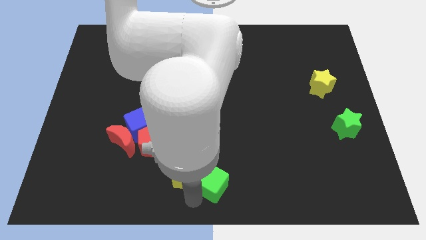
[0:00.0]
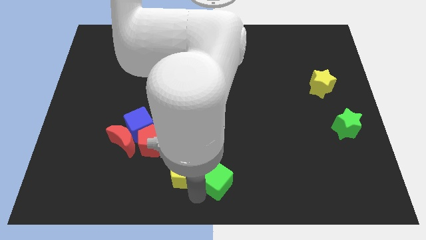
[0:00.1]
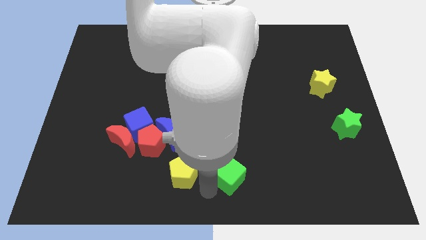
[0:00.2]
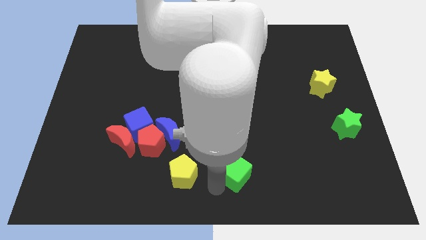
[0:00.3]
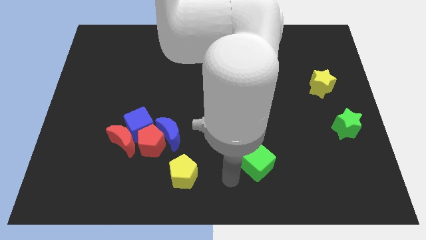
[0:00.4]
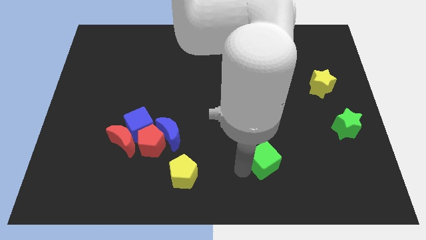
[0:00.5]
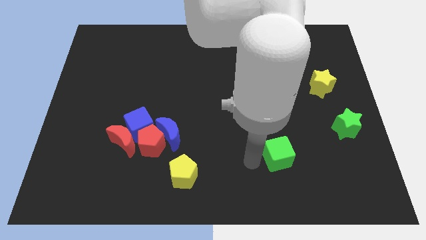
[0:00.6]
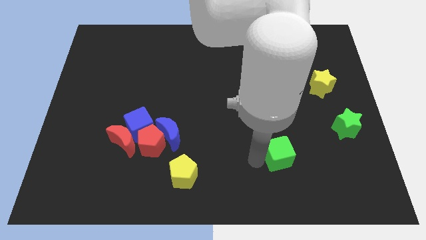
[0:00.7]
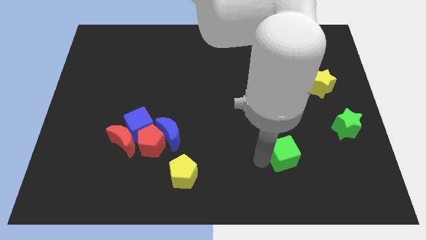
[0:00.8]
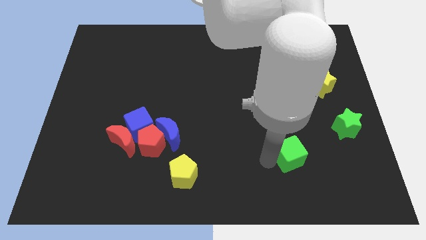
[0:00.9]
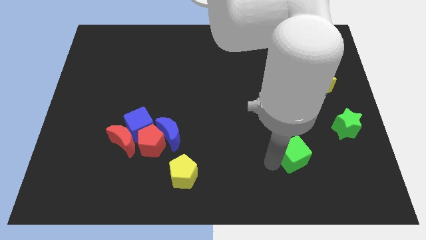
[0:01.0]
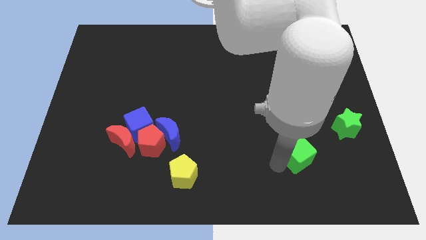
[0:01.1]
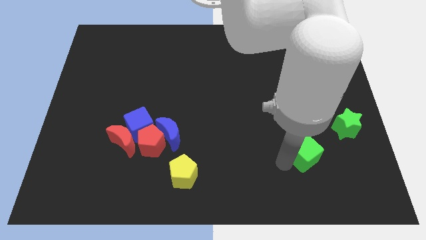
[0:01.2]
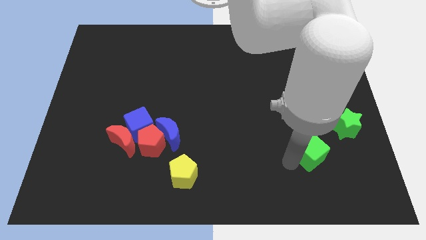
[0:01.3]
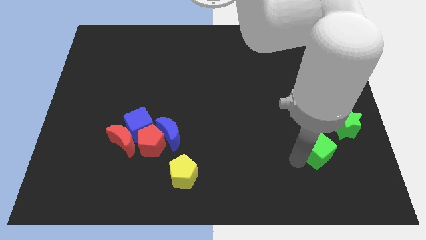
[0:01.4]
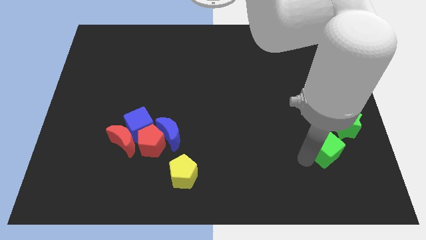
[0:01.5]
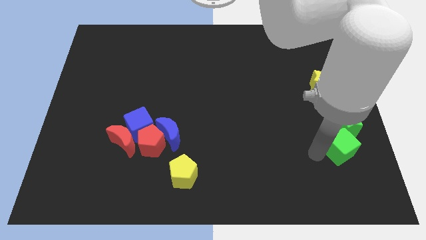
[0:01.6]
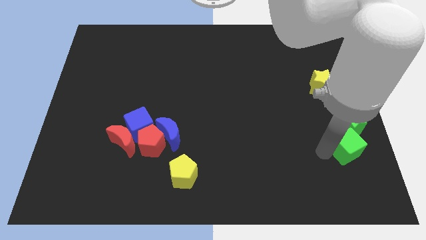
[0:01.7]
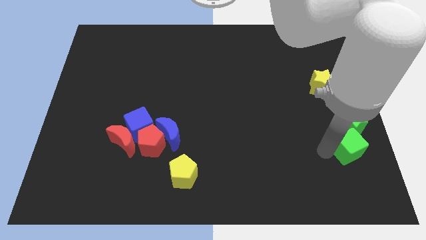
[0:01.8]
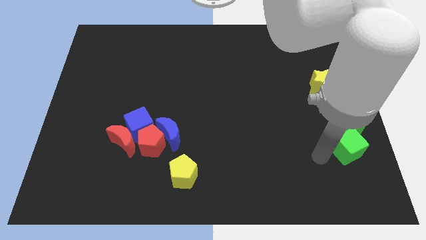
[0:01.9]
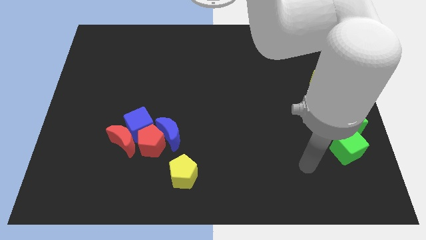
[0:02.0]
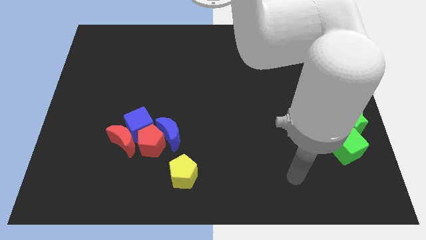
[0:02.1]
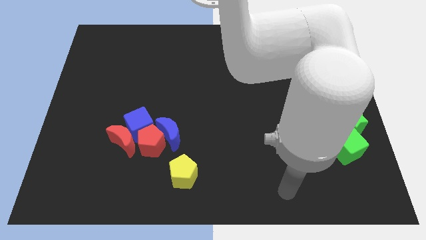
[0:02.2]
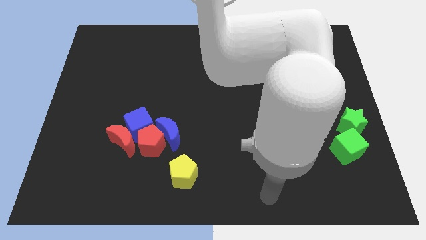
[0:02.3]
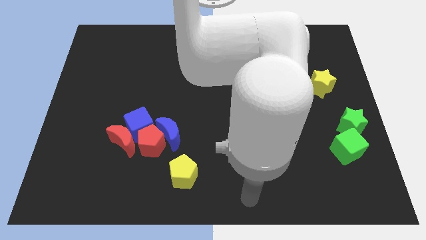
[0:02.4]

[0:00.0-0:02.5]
move the green cube to the bottom of the green star

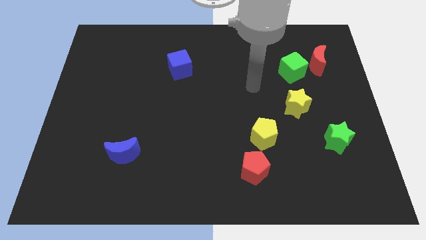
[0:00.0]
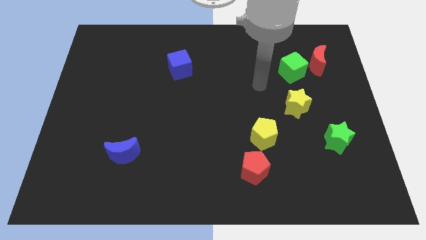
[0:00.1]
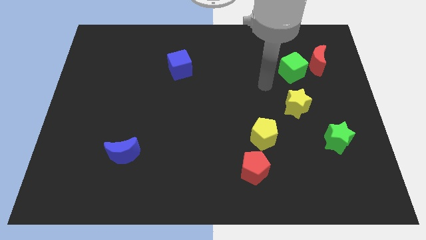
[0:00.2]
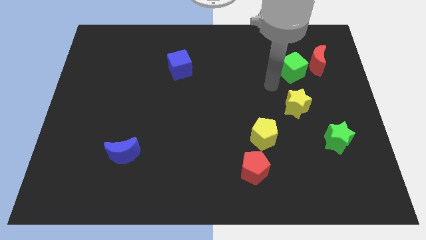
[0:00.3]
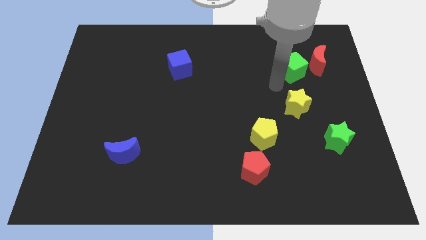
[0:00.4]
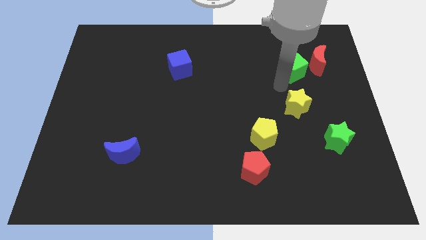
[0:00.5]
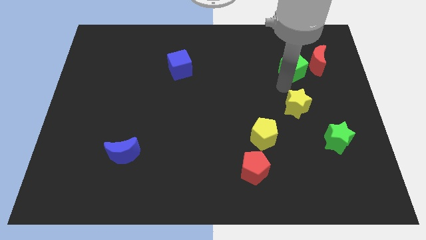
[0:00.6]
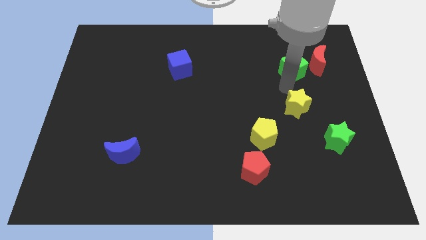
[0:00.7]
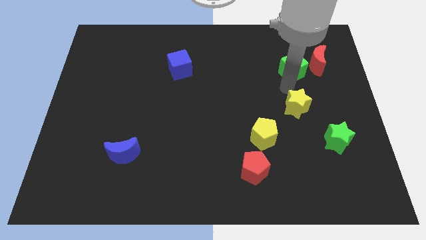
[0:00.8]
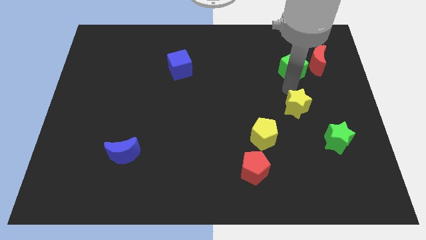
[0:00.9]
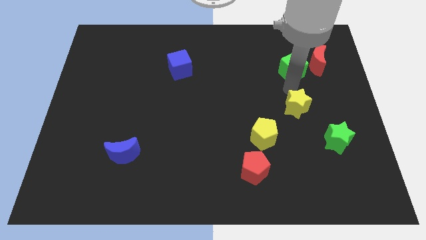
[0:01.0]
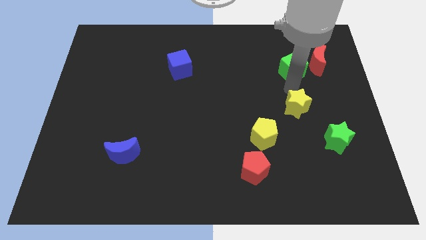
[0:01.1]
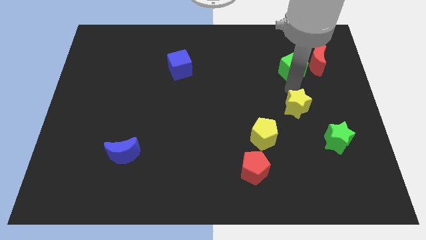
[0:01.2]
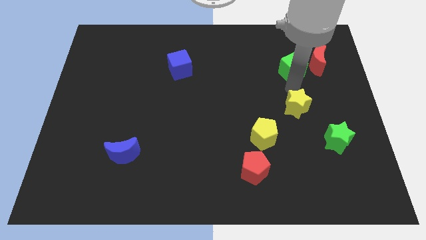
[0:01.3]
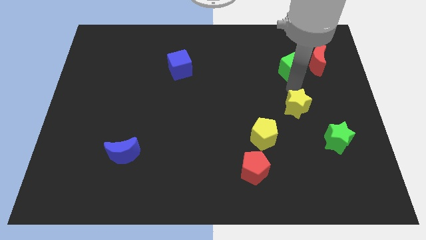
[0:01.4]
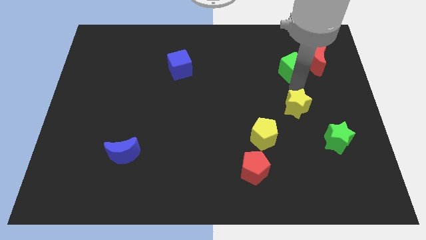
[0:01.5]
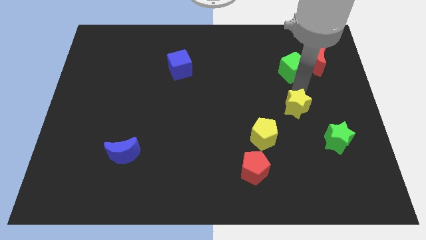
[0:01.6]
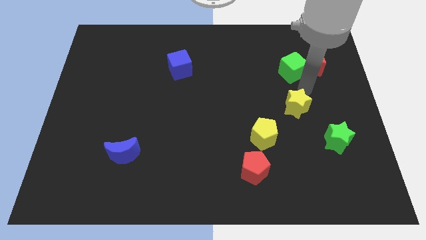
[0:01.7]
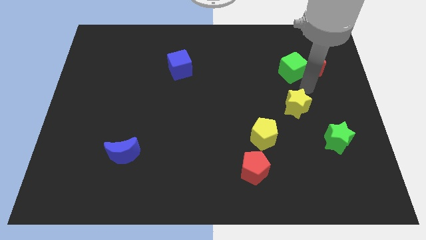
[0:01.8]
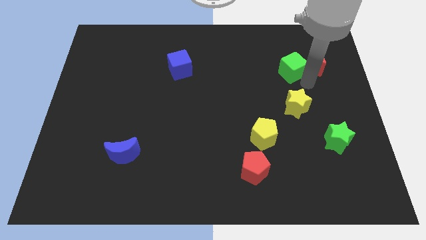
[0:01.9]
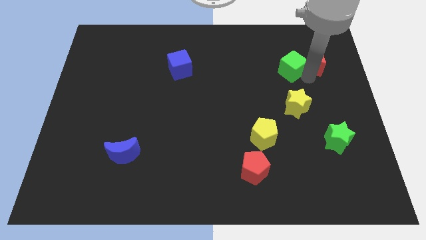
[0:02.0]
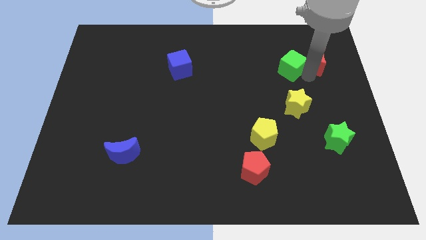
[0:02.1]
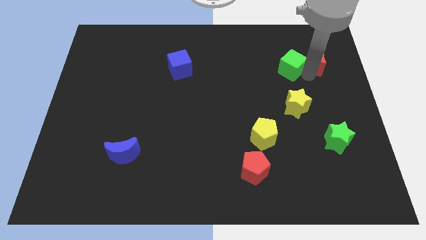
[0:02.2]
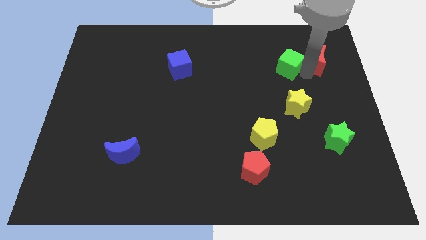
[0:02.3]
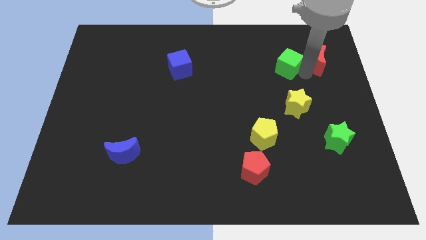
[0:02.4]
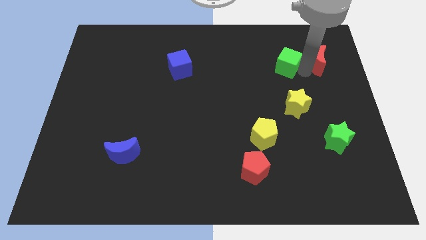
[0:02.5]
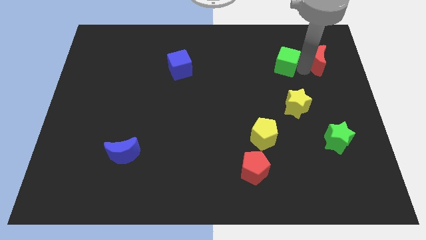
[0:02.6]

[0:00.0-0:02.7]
place your arm in between the green cube and red moon

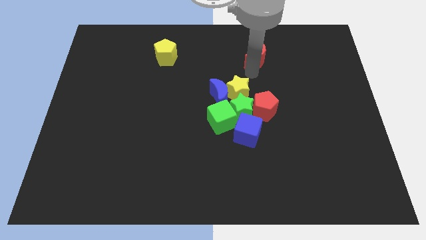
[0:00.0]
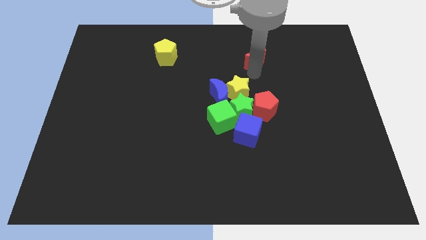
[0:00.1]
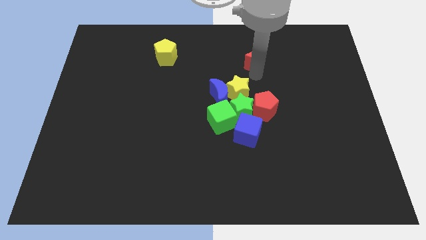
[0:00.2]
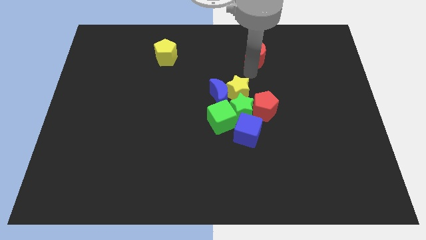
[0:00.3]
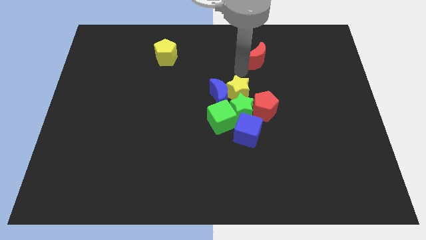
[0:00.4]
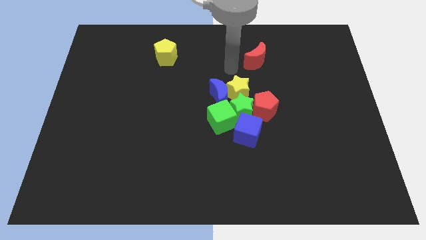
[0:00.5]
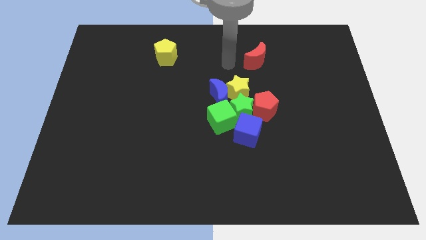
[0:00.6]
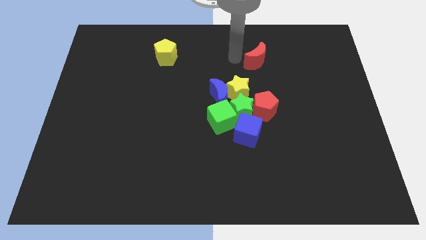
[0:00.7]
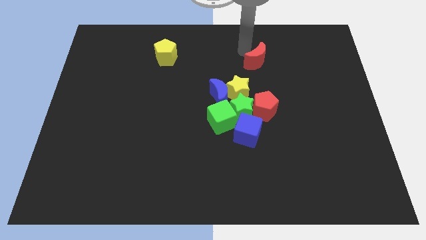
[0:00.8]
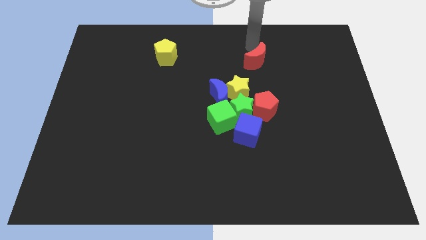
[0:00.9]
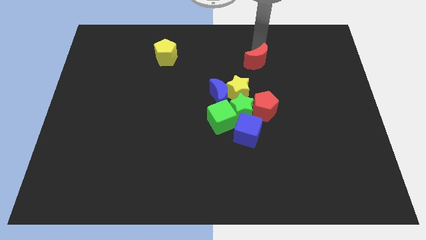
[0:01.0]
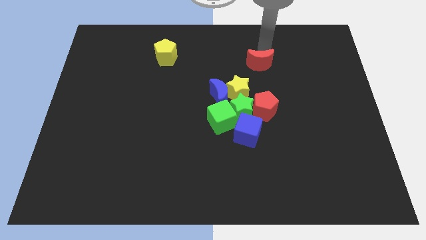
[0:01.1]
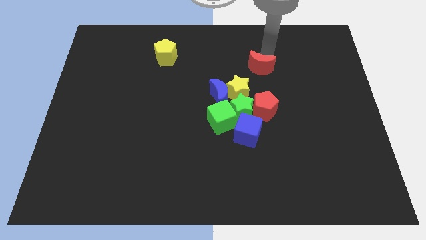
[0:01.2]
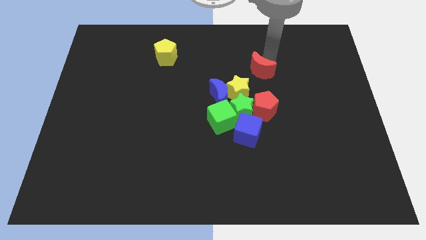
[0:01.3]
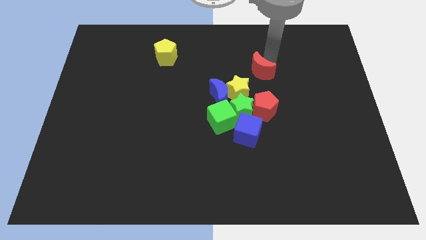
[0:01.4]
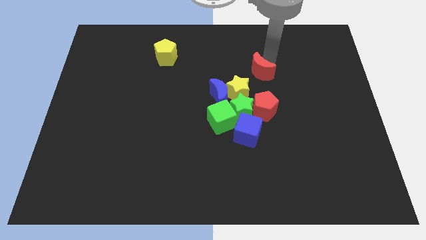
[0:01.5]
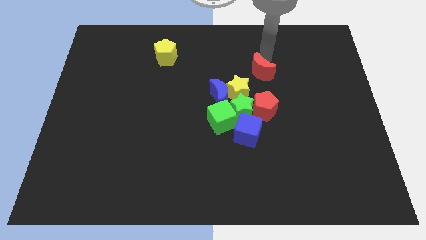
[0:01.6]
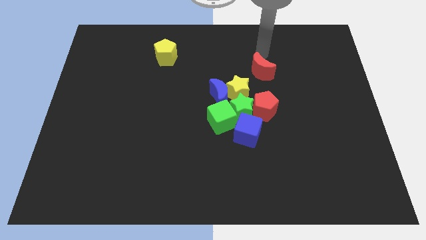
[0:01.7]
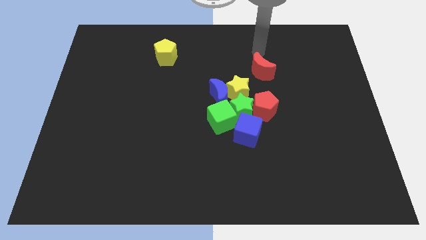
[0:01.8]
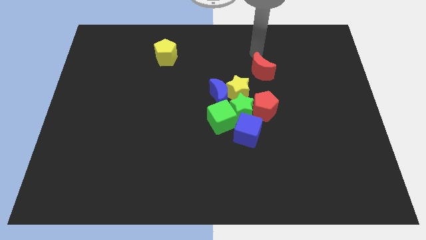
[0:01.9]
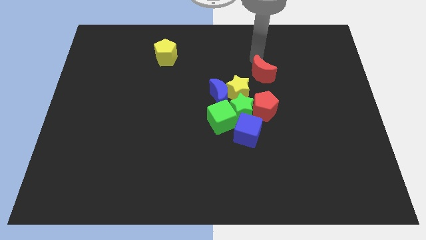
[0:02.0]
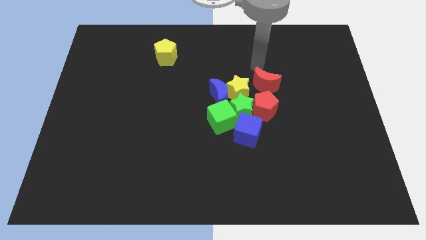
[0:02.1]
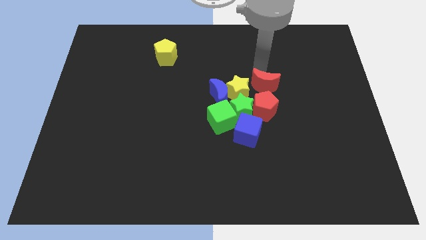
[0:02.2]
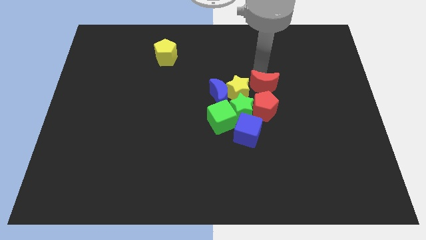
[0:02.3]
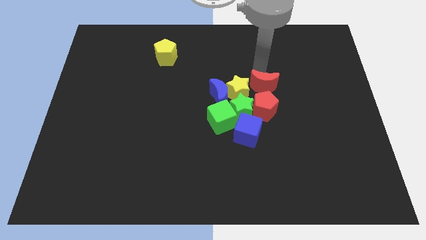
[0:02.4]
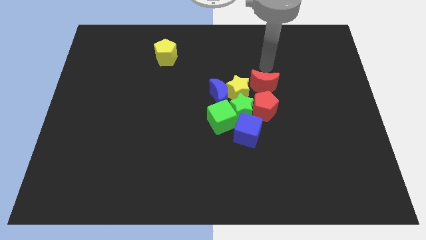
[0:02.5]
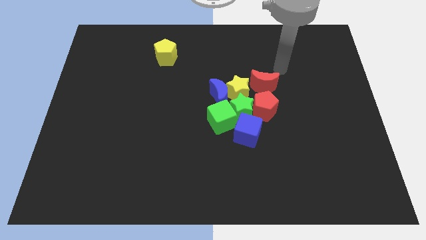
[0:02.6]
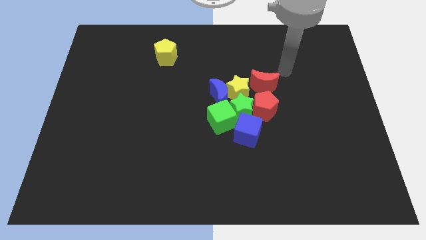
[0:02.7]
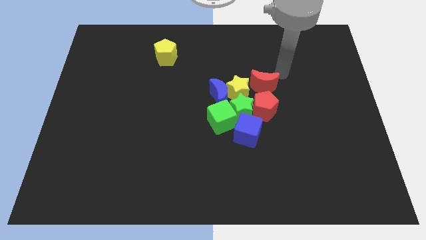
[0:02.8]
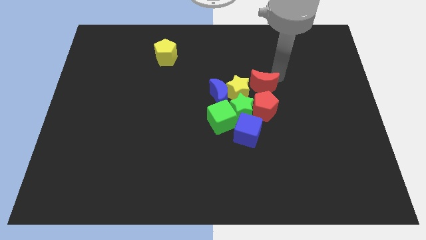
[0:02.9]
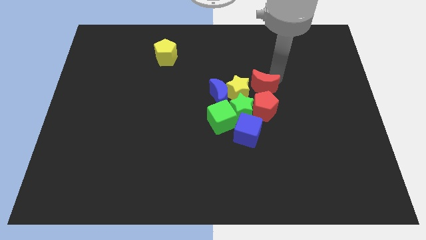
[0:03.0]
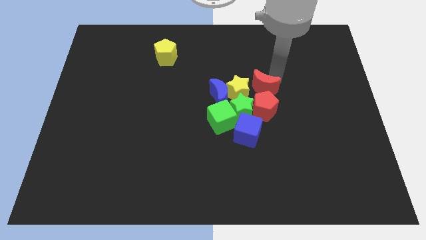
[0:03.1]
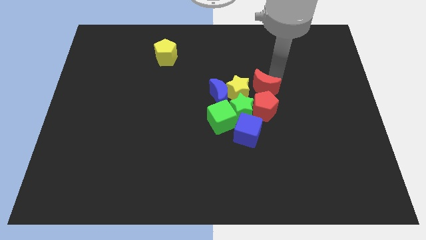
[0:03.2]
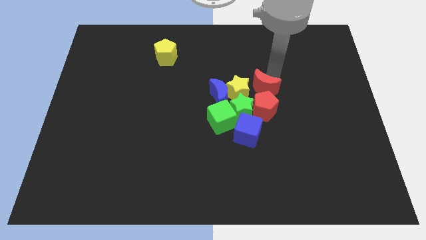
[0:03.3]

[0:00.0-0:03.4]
place the red moon at the top of red pentagon

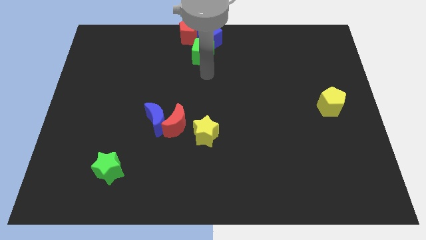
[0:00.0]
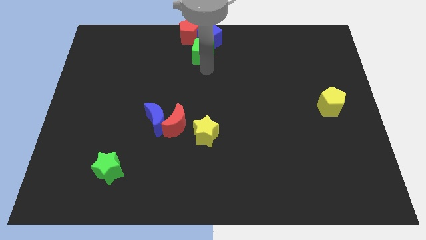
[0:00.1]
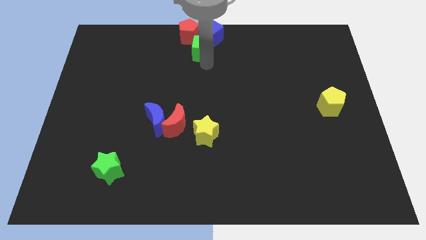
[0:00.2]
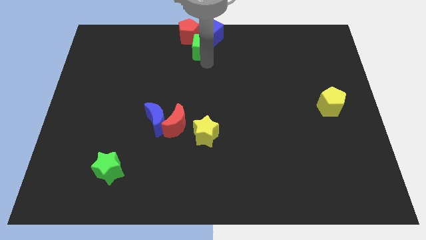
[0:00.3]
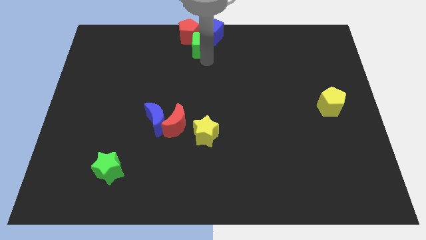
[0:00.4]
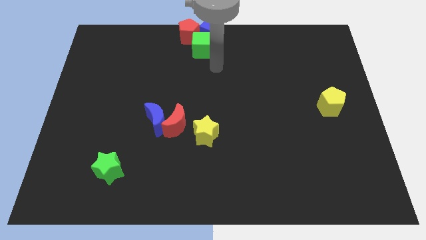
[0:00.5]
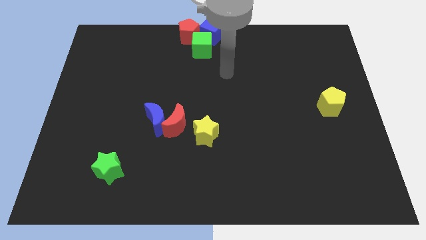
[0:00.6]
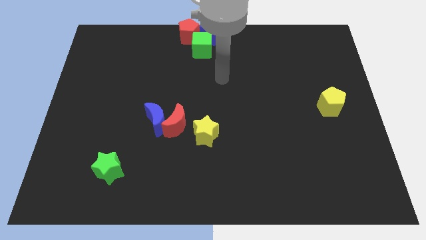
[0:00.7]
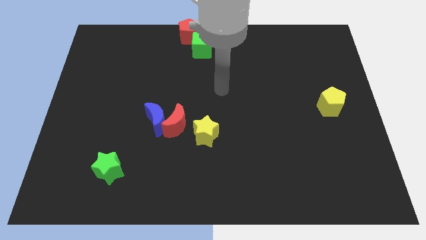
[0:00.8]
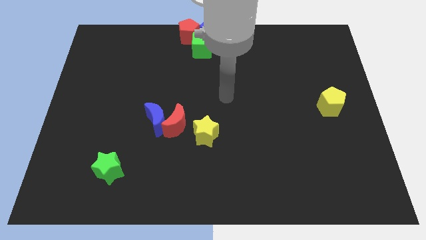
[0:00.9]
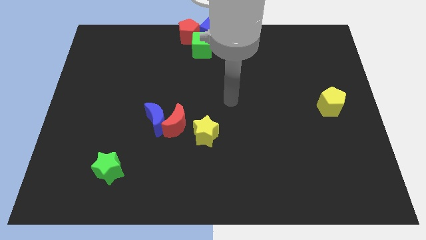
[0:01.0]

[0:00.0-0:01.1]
push green cube into blue cube
